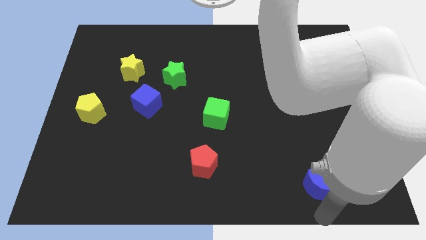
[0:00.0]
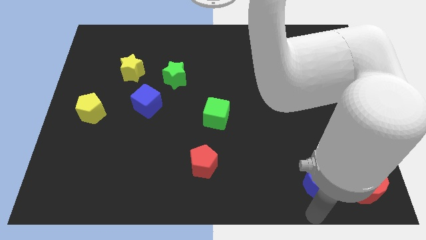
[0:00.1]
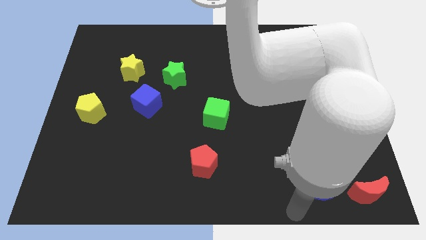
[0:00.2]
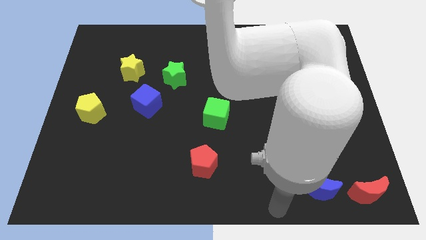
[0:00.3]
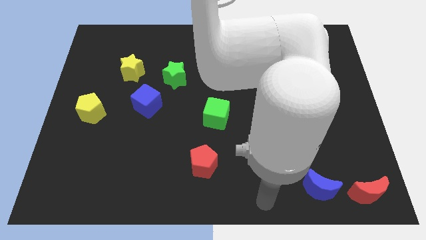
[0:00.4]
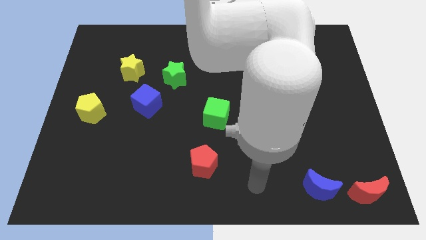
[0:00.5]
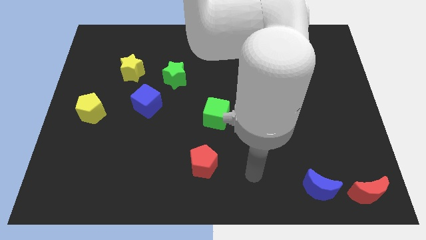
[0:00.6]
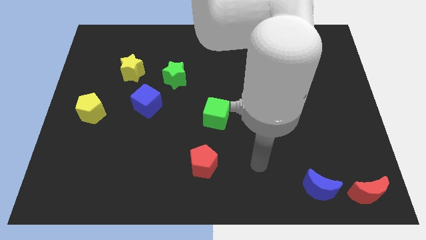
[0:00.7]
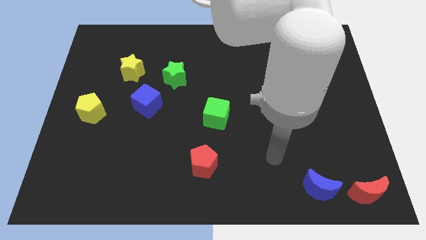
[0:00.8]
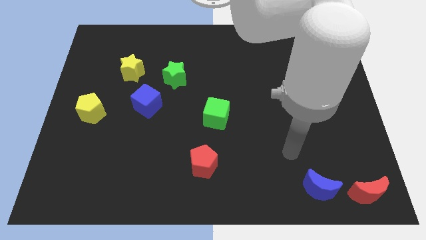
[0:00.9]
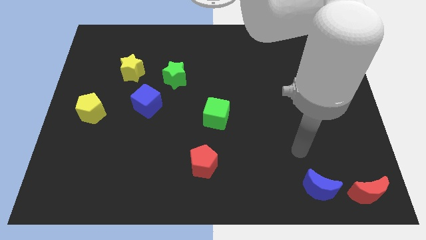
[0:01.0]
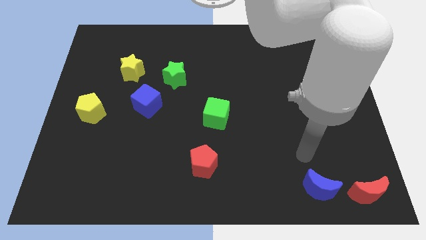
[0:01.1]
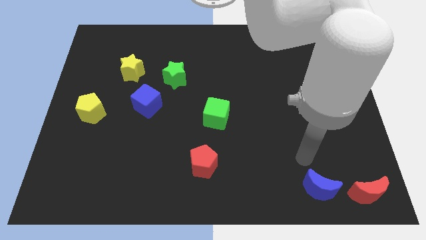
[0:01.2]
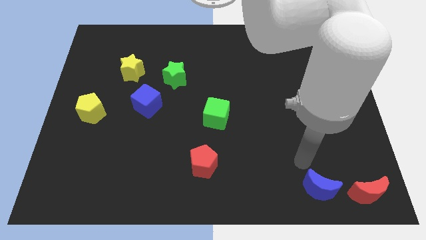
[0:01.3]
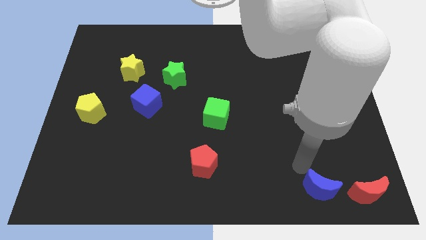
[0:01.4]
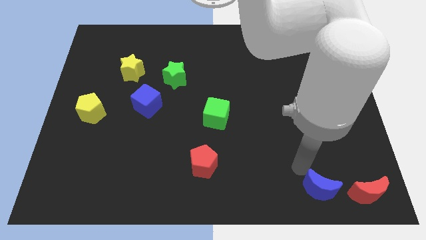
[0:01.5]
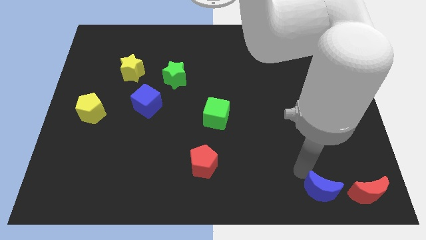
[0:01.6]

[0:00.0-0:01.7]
point the arm to the left top of the blue crescent

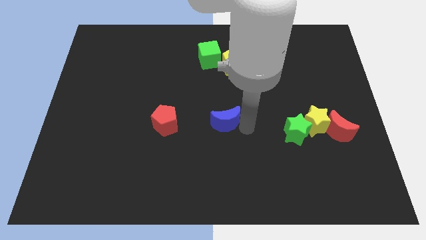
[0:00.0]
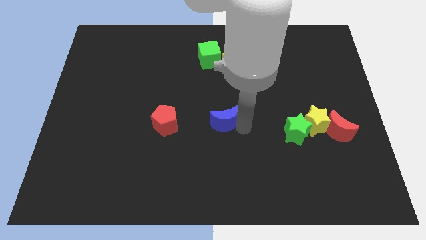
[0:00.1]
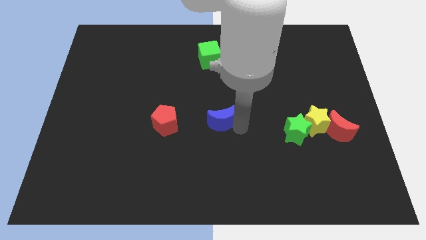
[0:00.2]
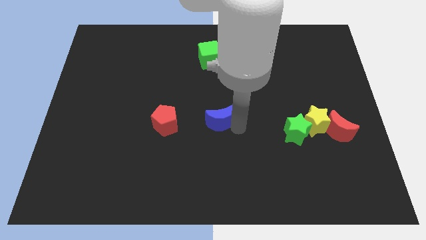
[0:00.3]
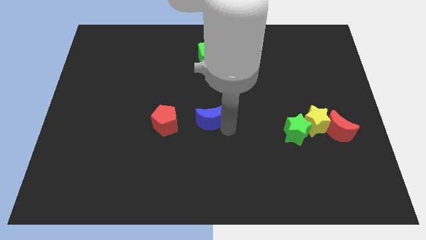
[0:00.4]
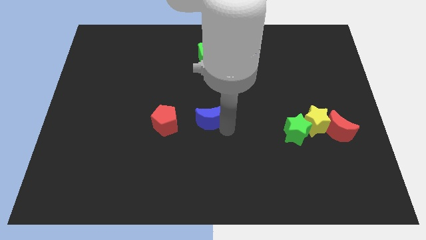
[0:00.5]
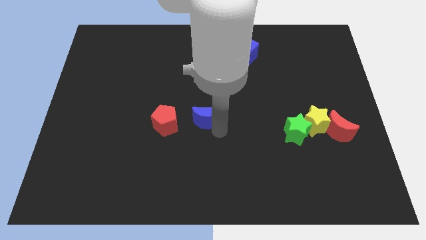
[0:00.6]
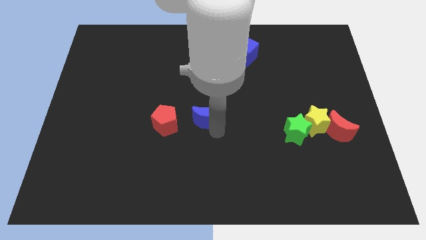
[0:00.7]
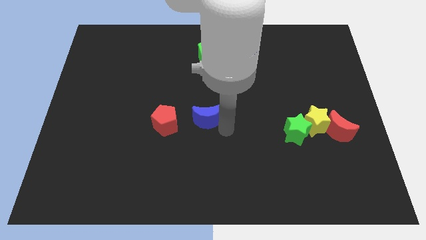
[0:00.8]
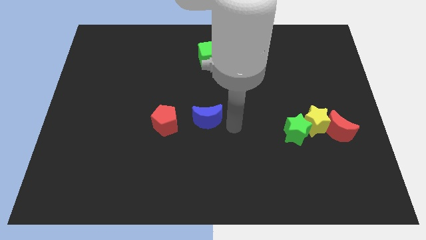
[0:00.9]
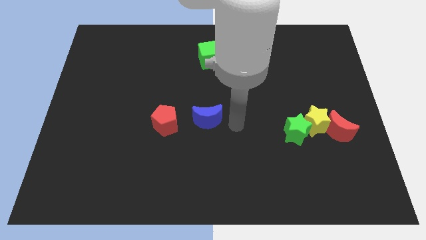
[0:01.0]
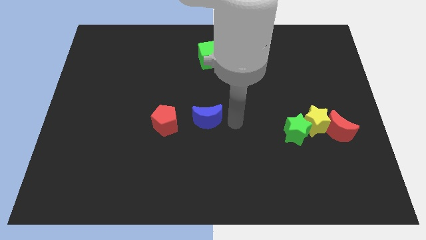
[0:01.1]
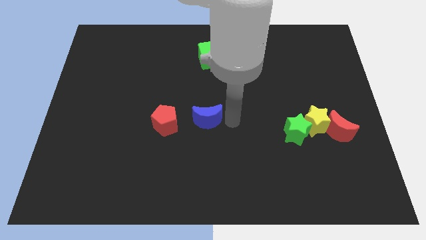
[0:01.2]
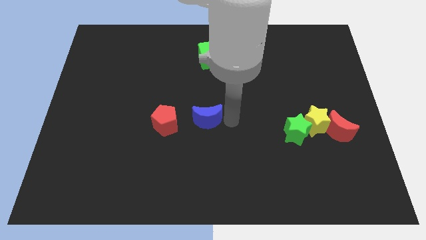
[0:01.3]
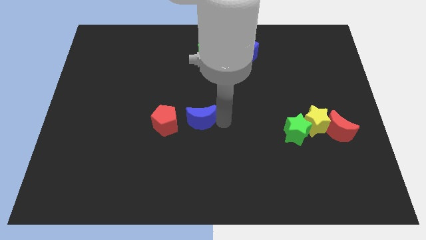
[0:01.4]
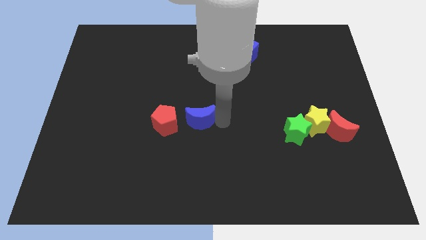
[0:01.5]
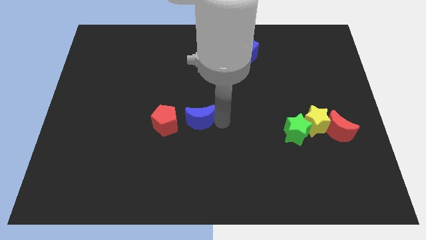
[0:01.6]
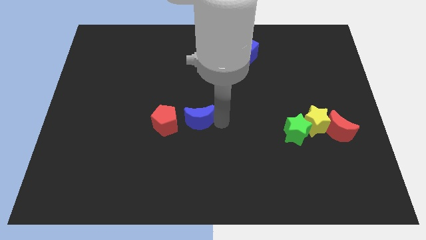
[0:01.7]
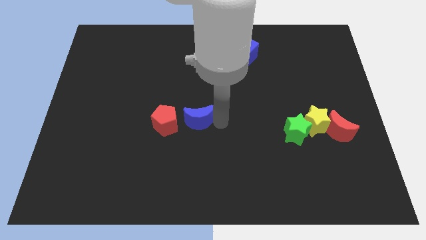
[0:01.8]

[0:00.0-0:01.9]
move blue crescent close to the right side of the red pentagon

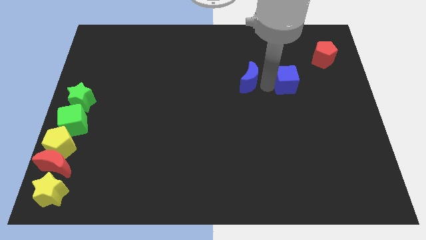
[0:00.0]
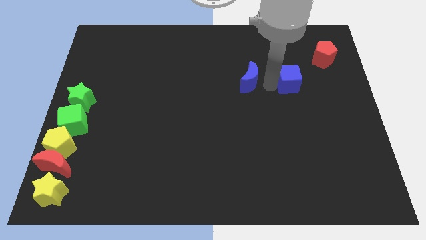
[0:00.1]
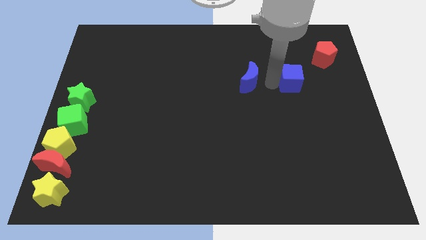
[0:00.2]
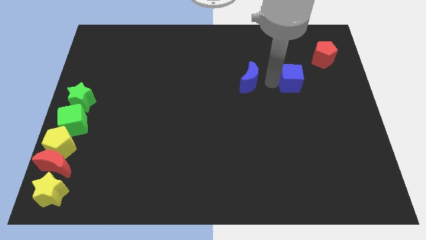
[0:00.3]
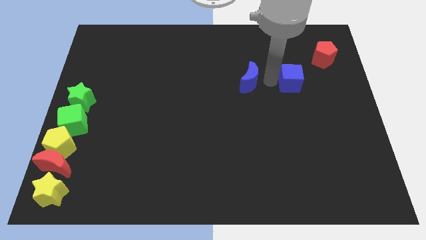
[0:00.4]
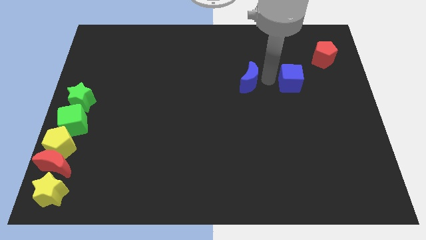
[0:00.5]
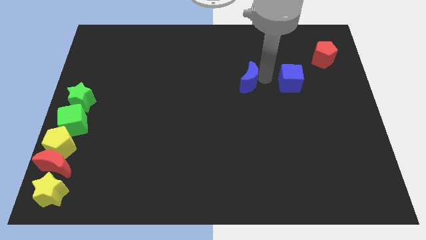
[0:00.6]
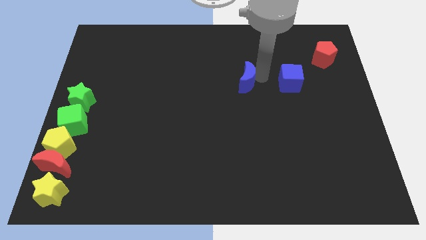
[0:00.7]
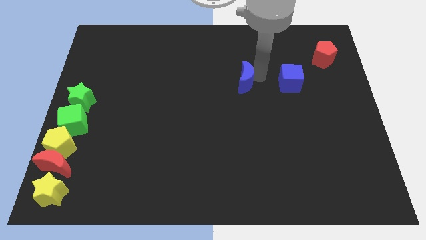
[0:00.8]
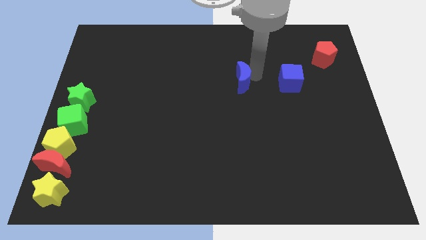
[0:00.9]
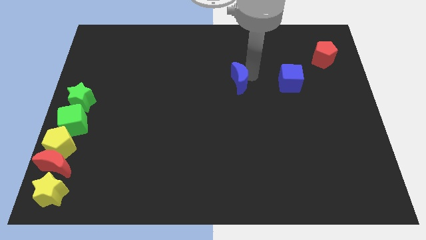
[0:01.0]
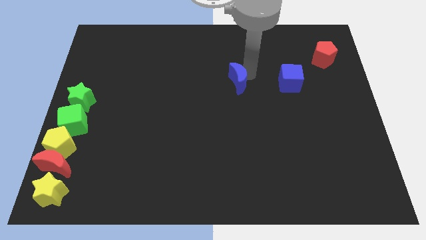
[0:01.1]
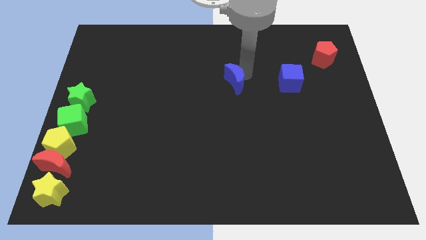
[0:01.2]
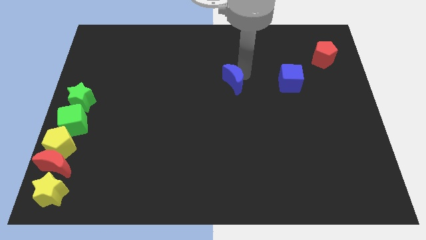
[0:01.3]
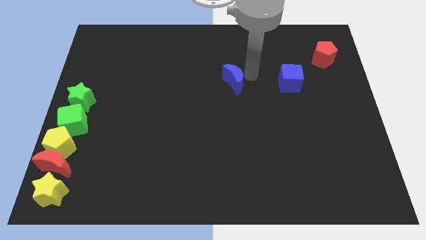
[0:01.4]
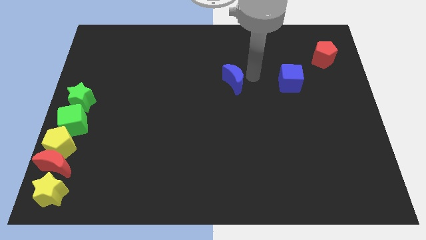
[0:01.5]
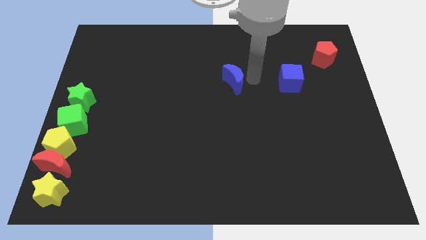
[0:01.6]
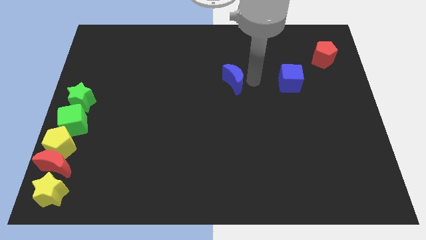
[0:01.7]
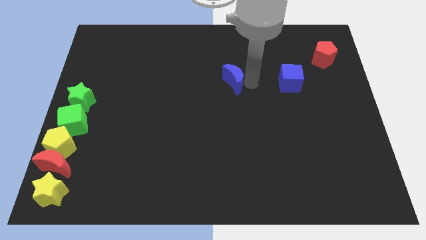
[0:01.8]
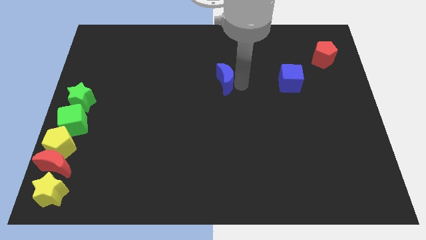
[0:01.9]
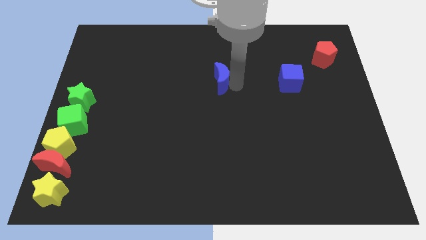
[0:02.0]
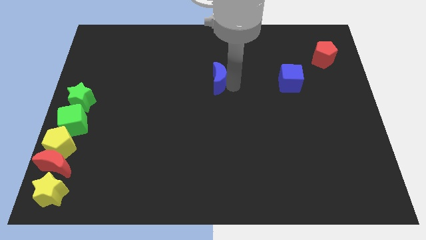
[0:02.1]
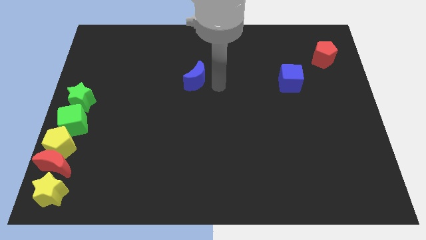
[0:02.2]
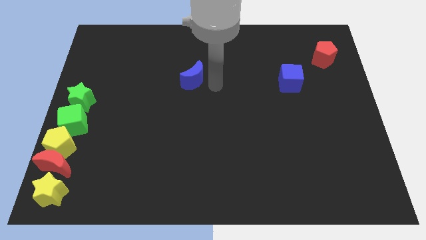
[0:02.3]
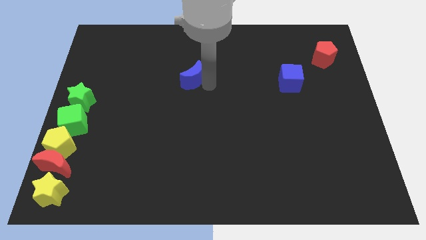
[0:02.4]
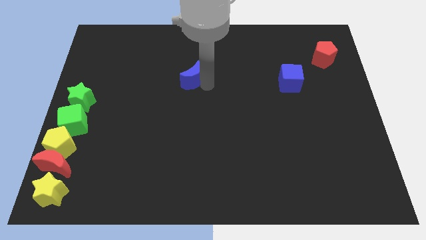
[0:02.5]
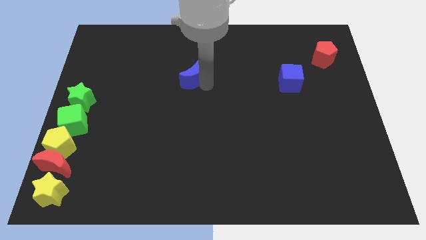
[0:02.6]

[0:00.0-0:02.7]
push blue crescent slightly towards left

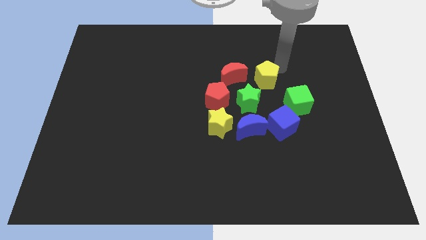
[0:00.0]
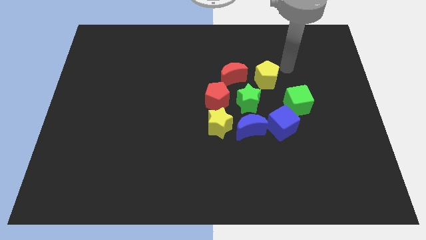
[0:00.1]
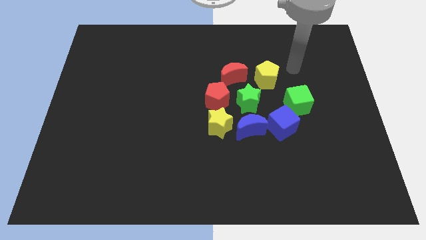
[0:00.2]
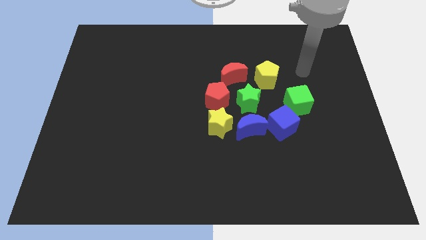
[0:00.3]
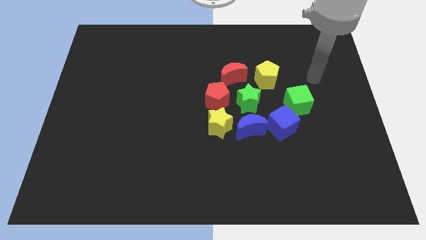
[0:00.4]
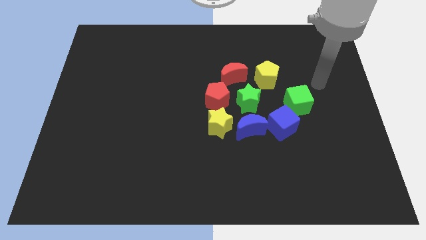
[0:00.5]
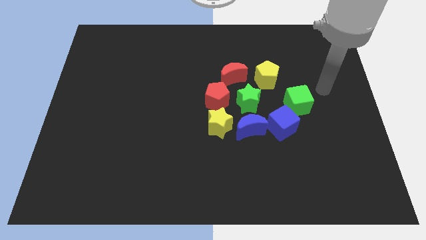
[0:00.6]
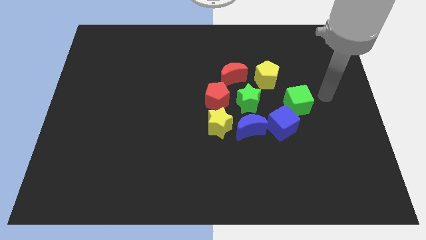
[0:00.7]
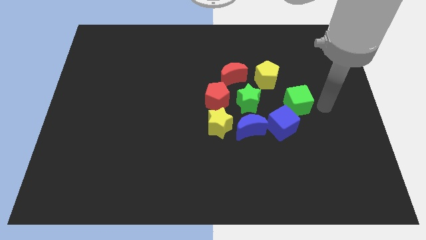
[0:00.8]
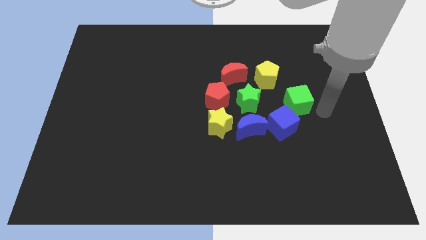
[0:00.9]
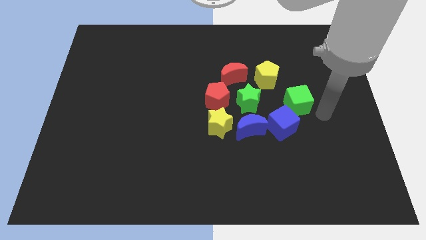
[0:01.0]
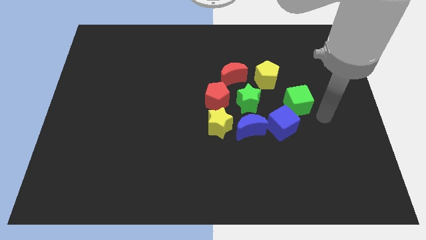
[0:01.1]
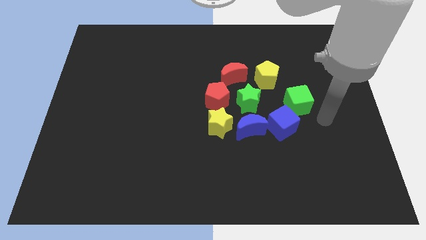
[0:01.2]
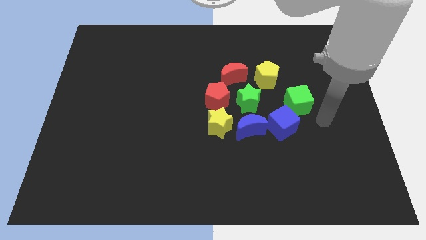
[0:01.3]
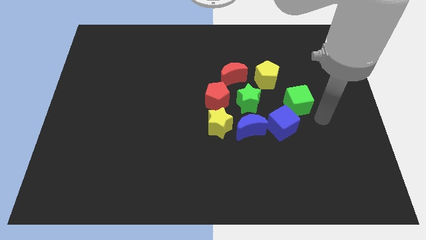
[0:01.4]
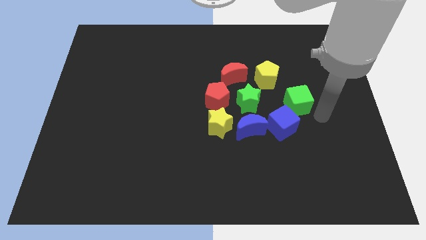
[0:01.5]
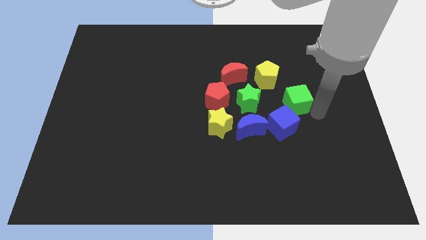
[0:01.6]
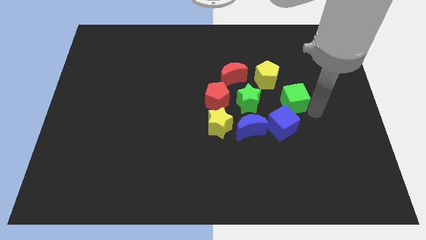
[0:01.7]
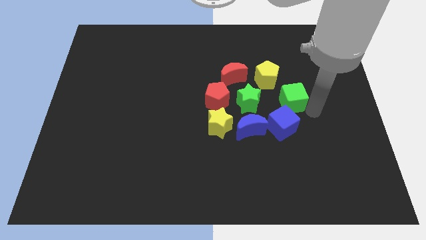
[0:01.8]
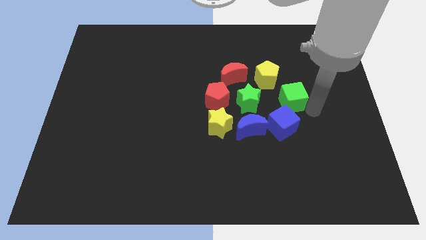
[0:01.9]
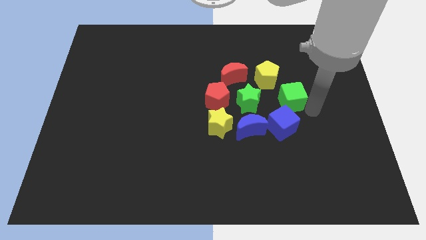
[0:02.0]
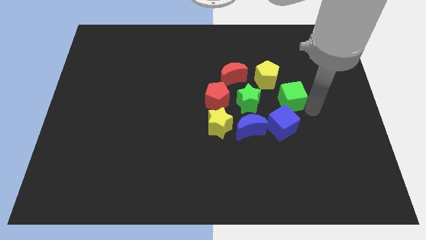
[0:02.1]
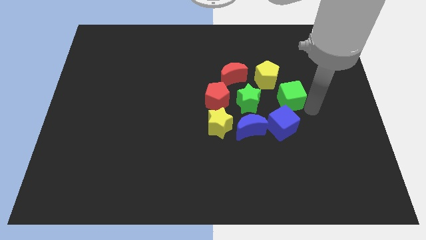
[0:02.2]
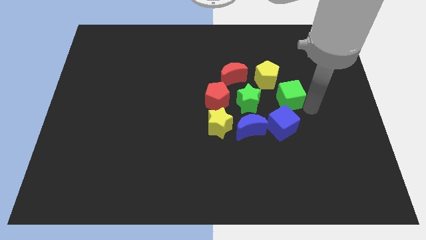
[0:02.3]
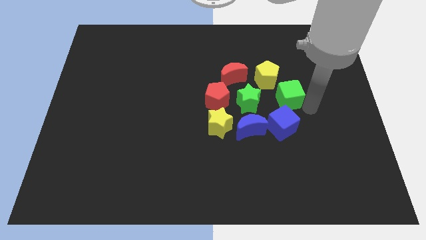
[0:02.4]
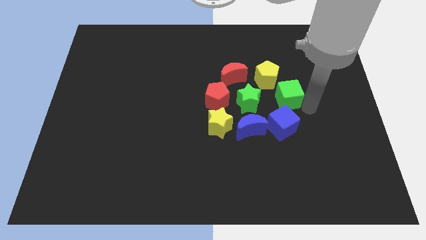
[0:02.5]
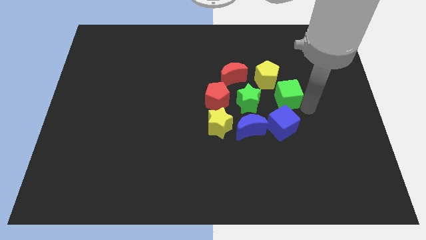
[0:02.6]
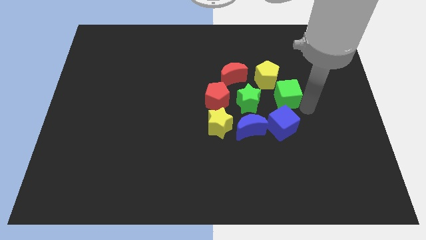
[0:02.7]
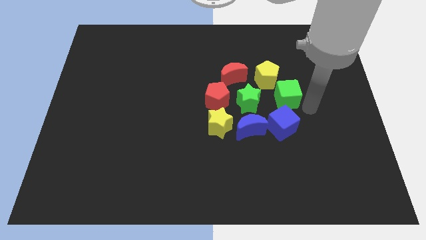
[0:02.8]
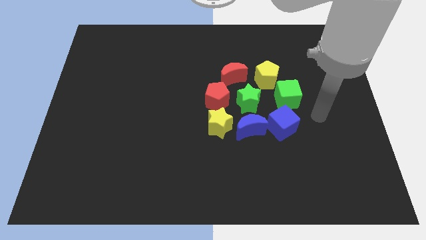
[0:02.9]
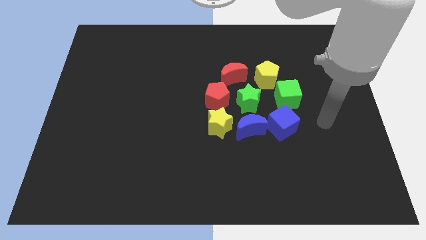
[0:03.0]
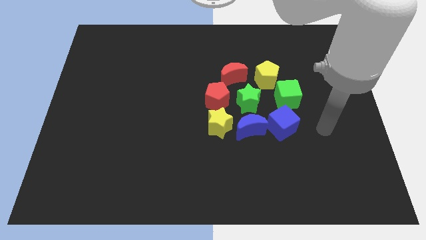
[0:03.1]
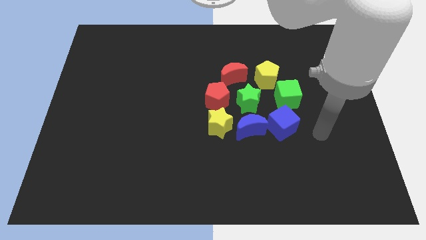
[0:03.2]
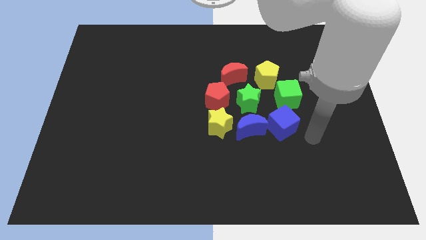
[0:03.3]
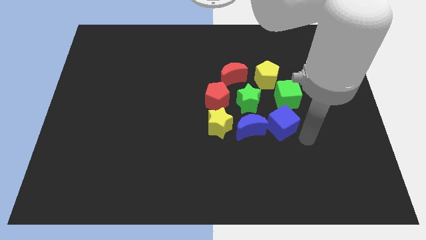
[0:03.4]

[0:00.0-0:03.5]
push the blue cube to the top of the board
